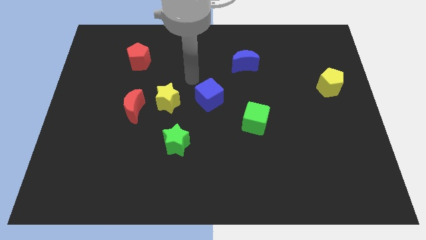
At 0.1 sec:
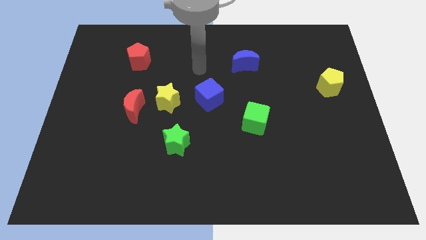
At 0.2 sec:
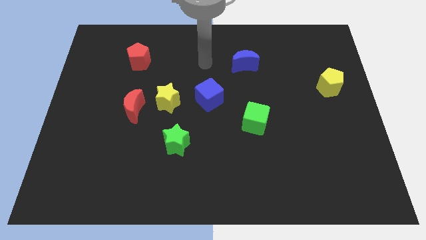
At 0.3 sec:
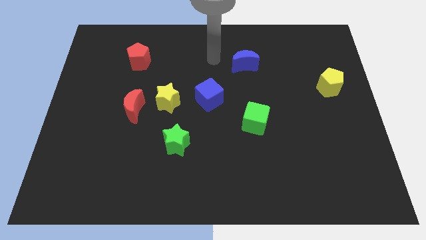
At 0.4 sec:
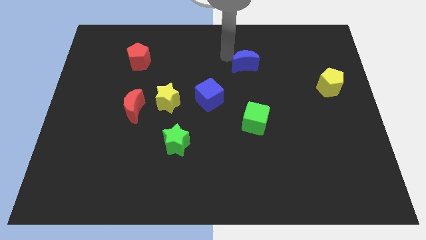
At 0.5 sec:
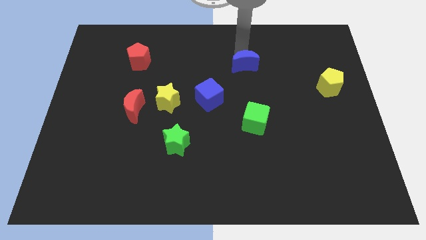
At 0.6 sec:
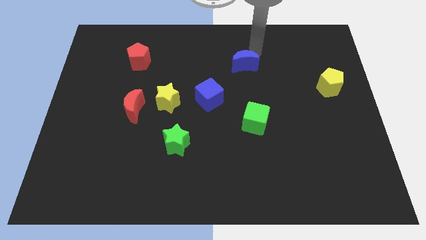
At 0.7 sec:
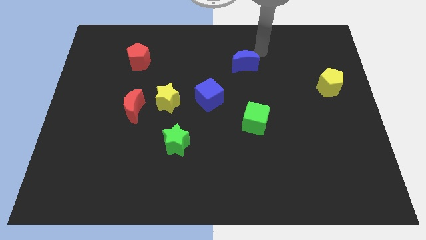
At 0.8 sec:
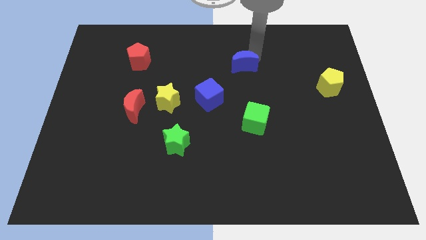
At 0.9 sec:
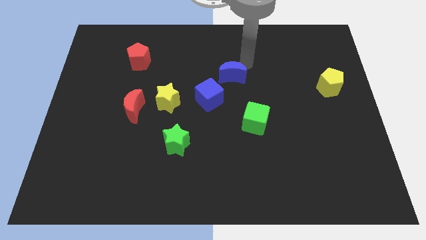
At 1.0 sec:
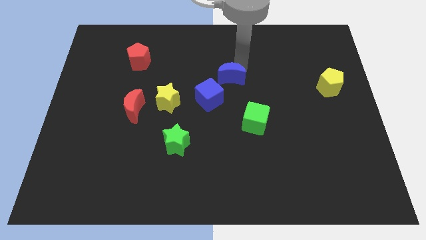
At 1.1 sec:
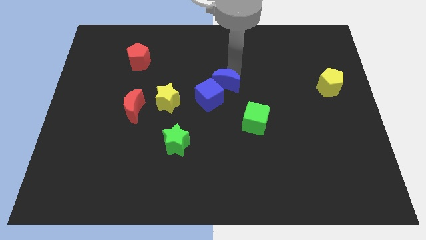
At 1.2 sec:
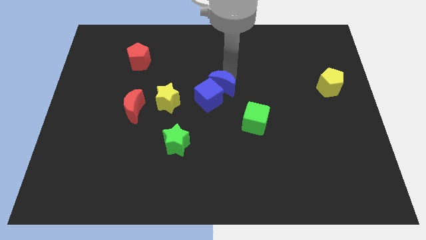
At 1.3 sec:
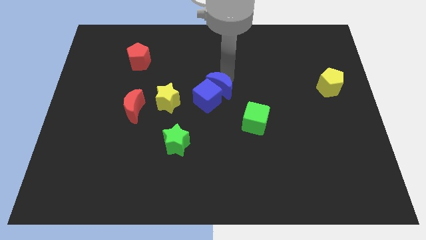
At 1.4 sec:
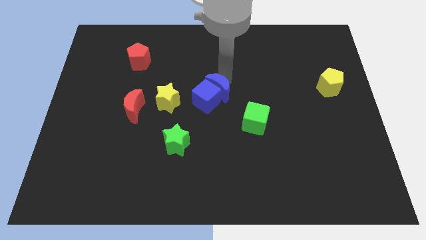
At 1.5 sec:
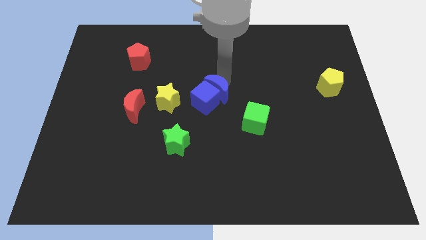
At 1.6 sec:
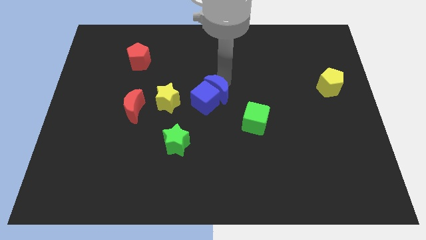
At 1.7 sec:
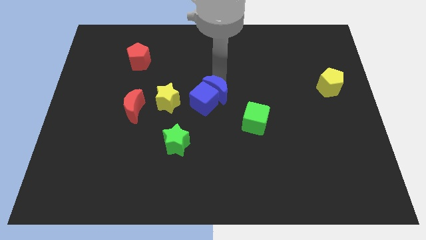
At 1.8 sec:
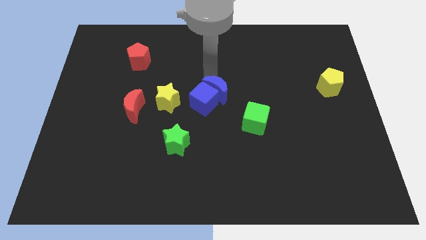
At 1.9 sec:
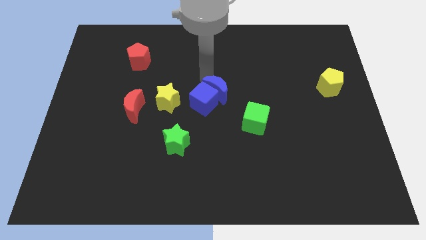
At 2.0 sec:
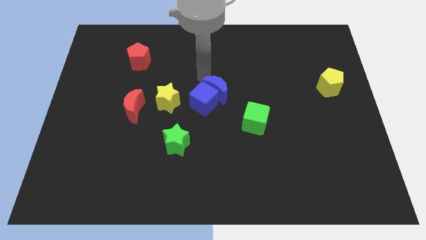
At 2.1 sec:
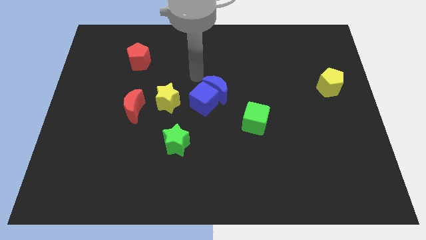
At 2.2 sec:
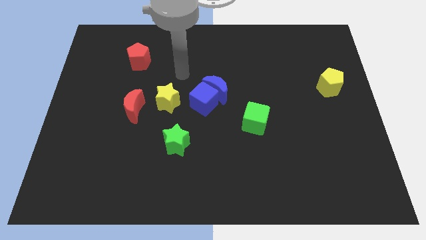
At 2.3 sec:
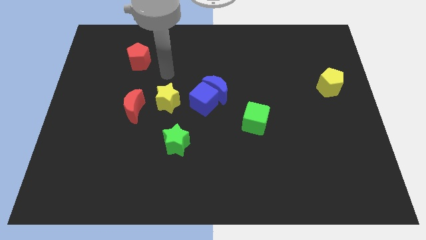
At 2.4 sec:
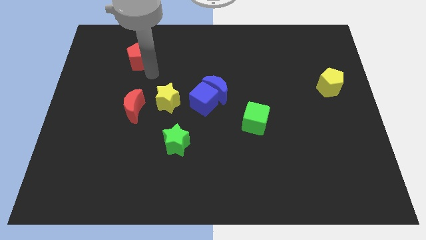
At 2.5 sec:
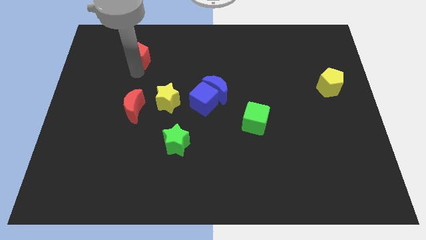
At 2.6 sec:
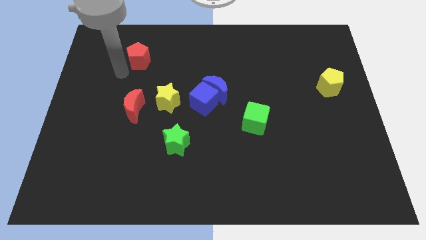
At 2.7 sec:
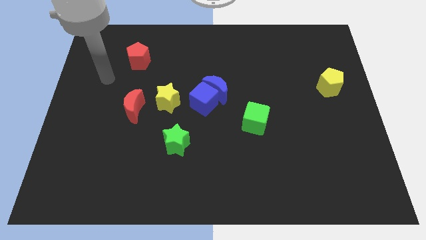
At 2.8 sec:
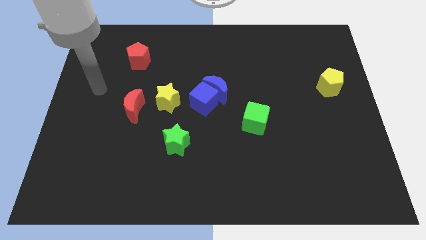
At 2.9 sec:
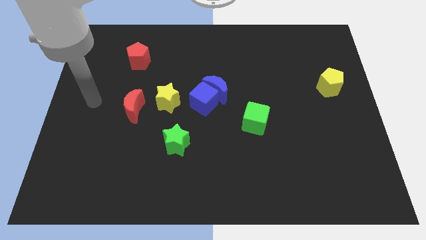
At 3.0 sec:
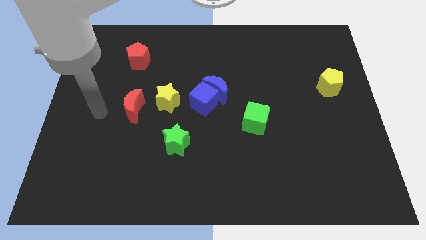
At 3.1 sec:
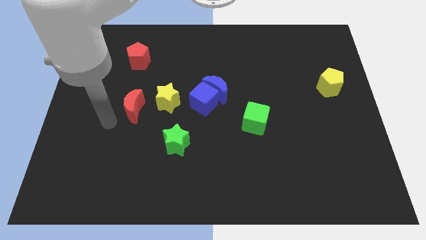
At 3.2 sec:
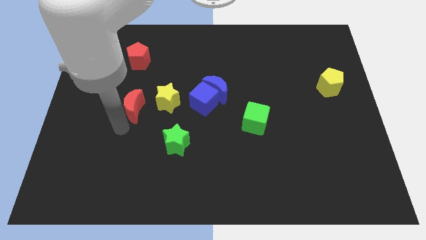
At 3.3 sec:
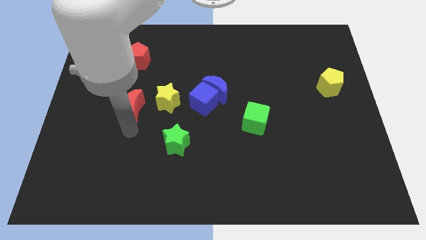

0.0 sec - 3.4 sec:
push the blue crescent into the blue cube

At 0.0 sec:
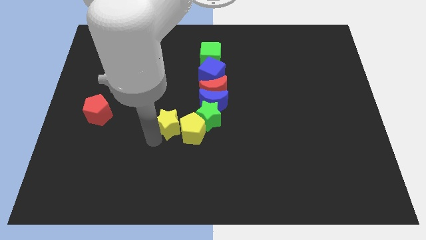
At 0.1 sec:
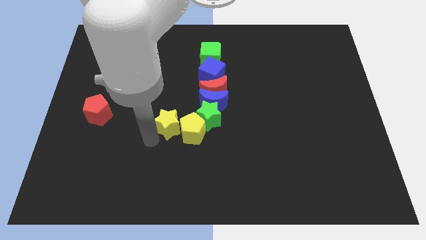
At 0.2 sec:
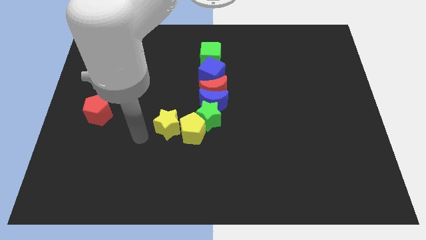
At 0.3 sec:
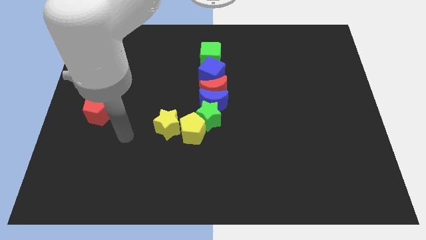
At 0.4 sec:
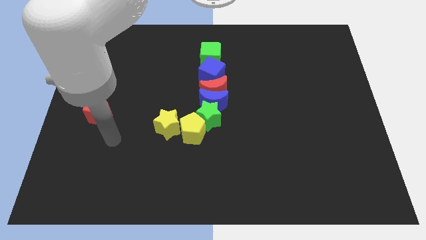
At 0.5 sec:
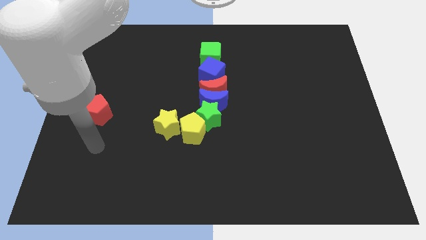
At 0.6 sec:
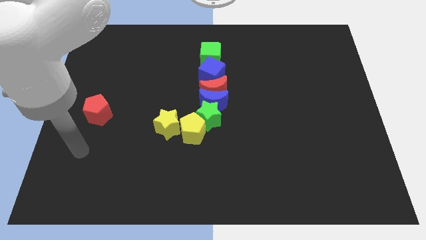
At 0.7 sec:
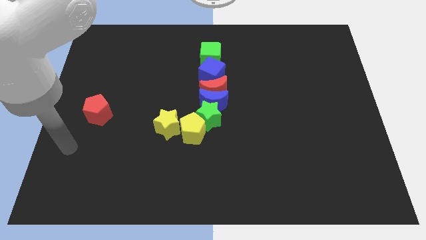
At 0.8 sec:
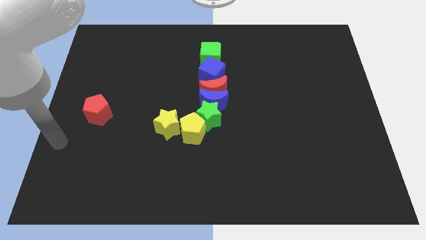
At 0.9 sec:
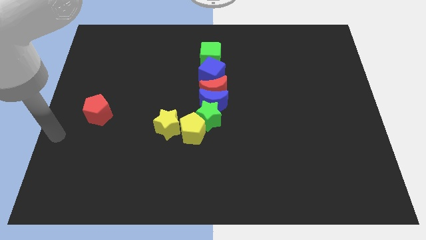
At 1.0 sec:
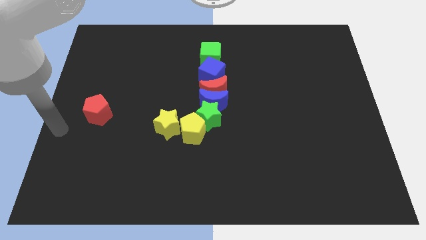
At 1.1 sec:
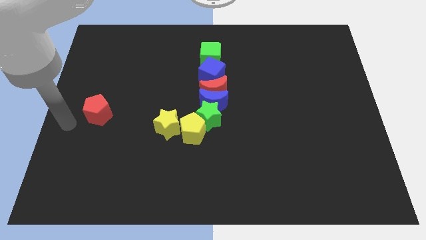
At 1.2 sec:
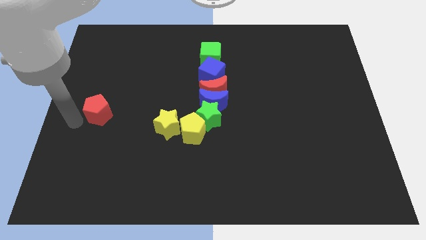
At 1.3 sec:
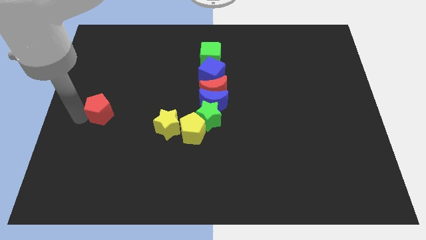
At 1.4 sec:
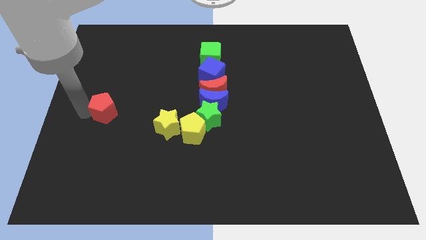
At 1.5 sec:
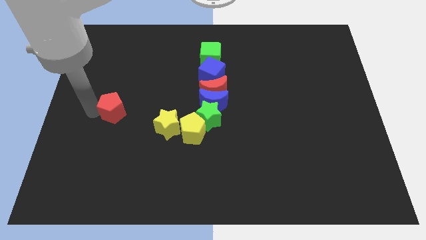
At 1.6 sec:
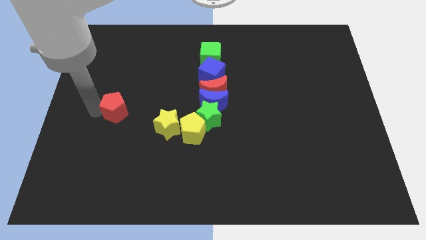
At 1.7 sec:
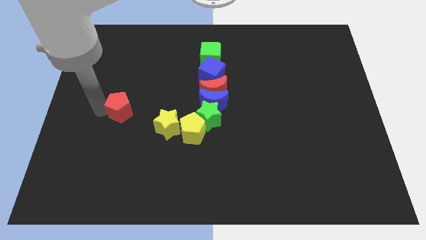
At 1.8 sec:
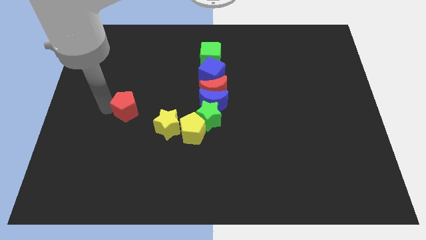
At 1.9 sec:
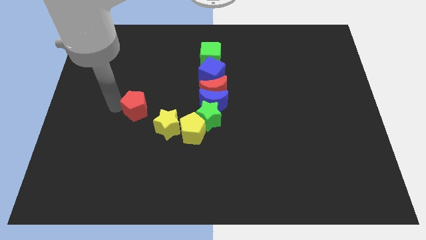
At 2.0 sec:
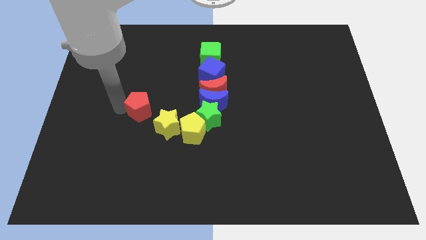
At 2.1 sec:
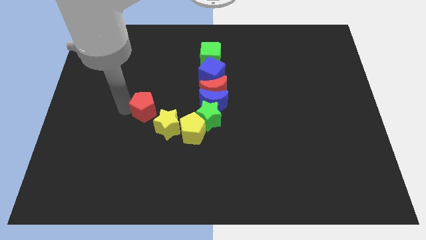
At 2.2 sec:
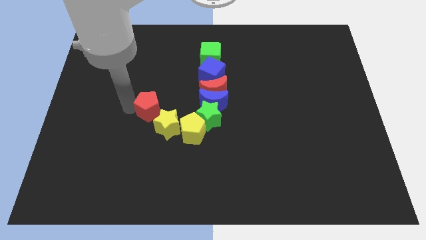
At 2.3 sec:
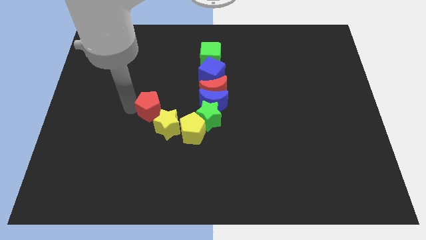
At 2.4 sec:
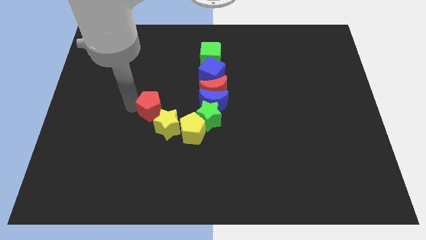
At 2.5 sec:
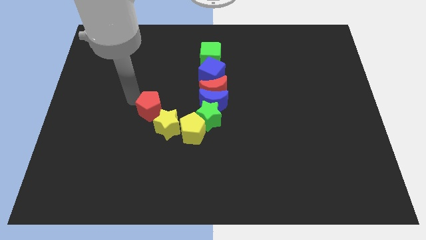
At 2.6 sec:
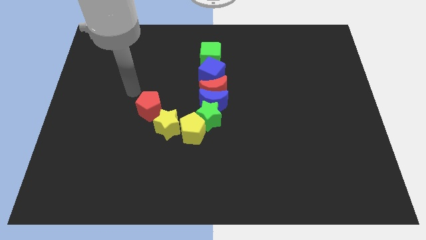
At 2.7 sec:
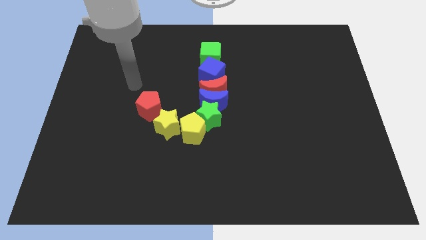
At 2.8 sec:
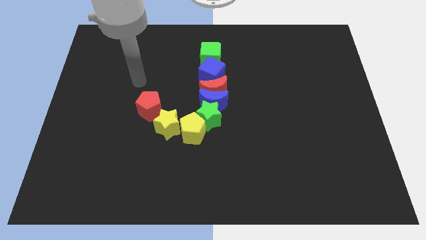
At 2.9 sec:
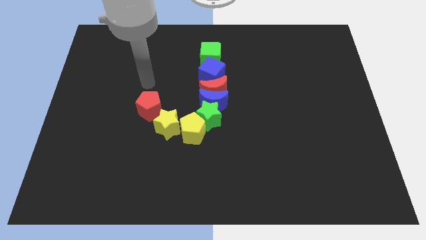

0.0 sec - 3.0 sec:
push the red pentagon to the top left of the yellow star

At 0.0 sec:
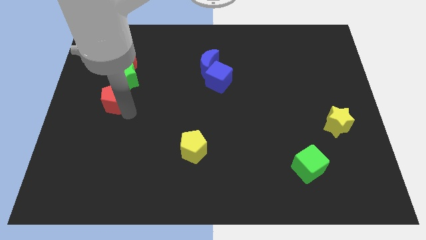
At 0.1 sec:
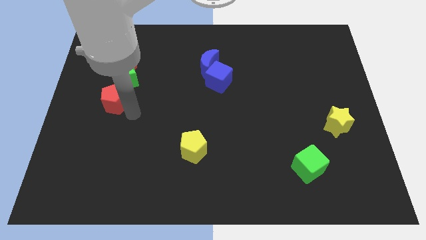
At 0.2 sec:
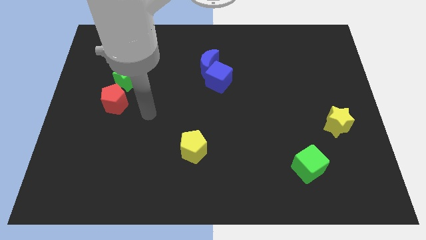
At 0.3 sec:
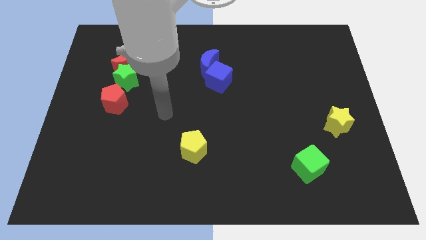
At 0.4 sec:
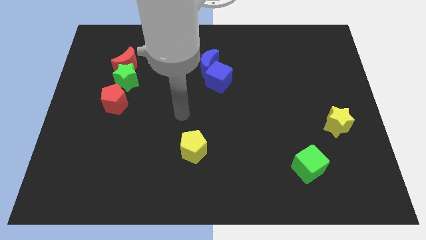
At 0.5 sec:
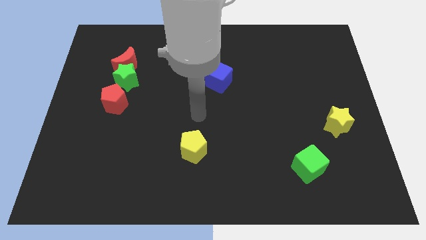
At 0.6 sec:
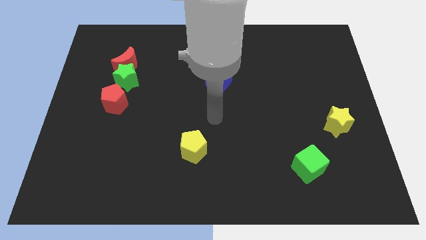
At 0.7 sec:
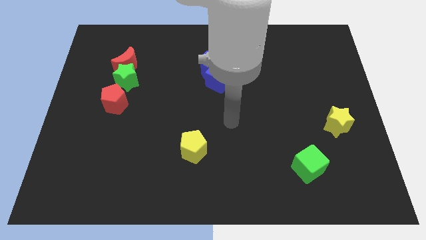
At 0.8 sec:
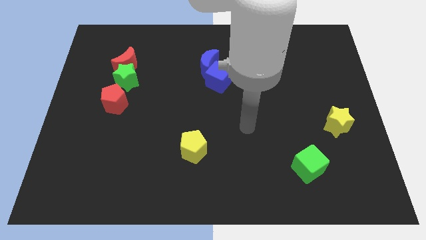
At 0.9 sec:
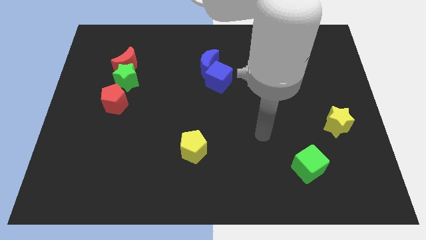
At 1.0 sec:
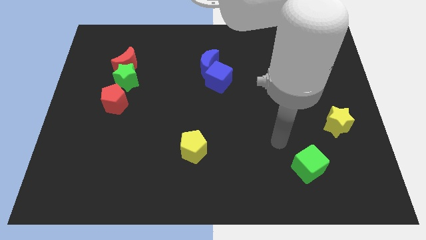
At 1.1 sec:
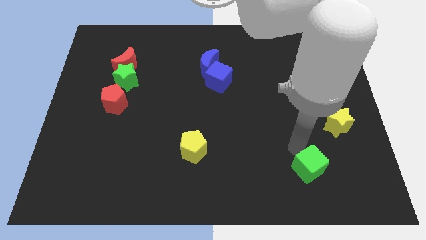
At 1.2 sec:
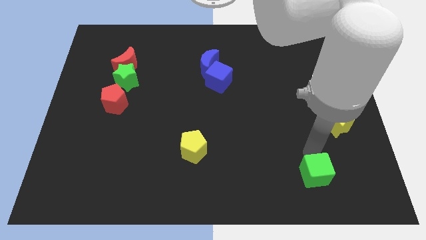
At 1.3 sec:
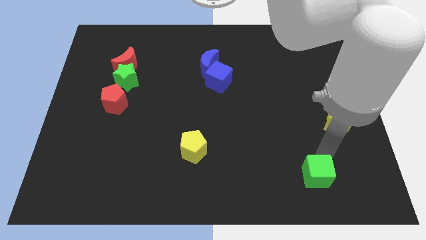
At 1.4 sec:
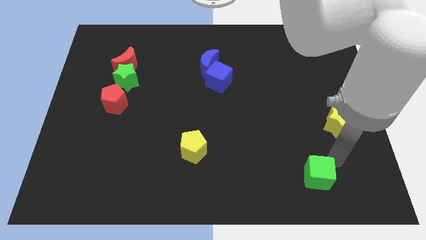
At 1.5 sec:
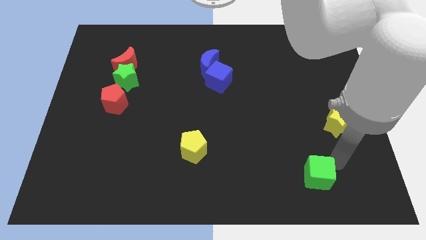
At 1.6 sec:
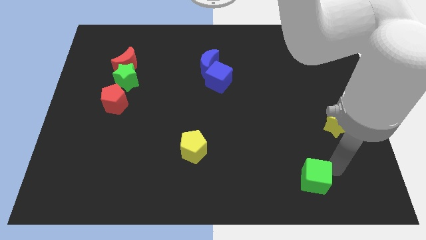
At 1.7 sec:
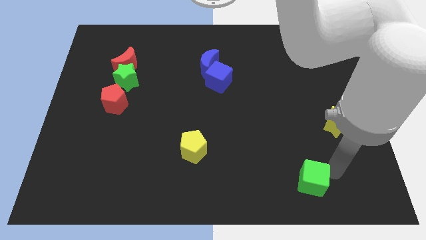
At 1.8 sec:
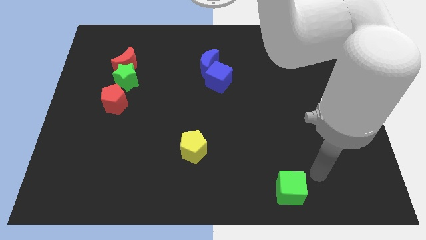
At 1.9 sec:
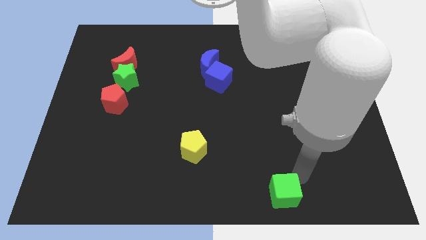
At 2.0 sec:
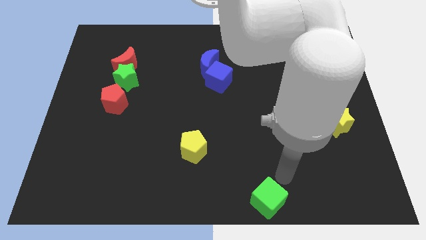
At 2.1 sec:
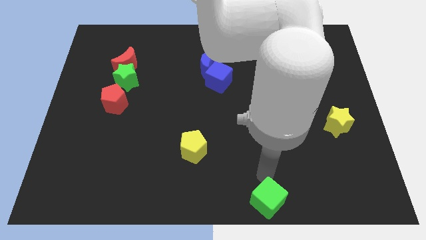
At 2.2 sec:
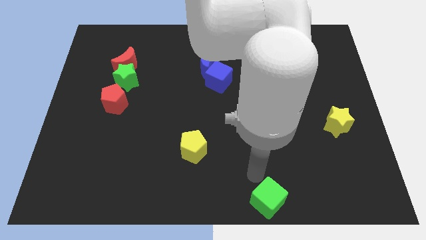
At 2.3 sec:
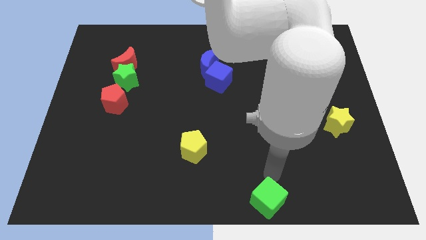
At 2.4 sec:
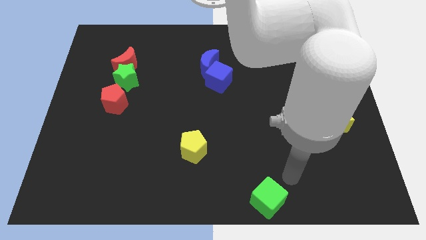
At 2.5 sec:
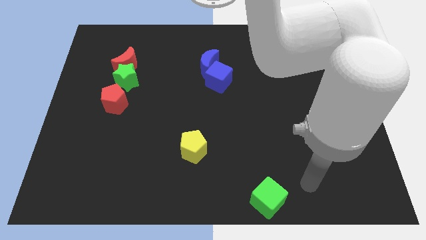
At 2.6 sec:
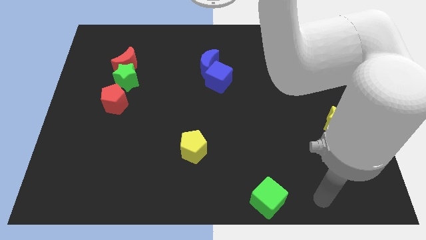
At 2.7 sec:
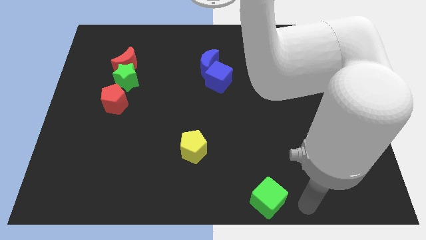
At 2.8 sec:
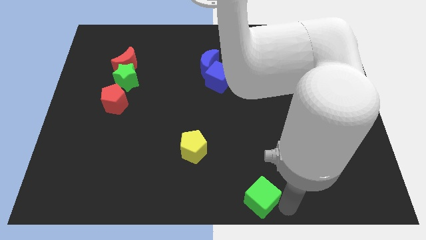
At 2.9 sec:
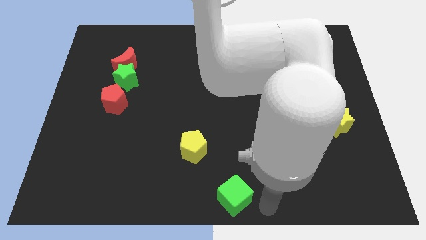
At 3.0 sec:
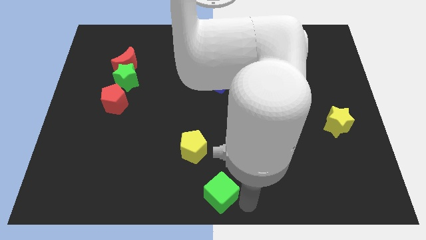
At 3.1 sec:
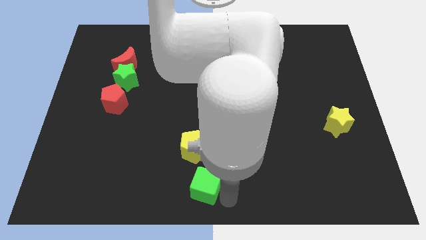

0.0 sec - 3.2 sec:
push the green cube to the center of the board
